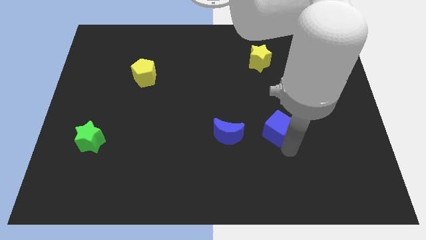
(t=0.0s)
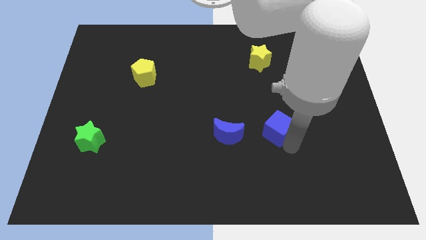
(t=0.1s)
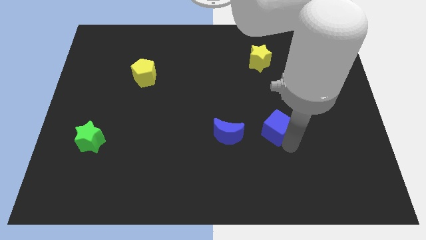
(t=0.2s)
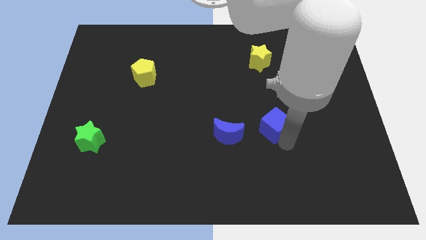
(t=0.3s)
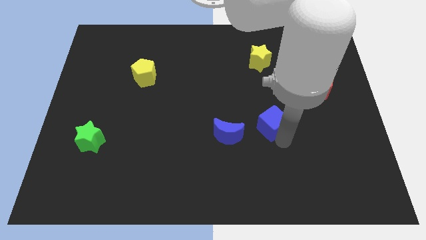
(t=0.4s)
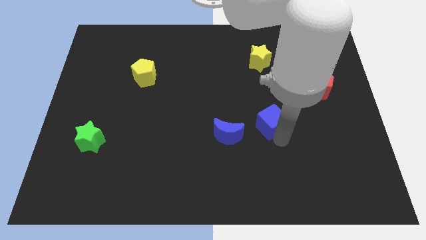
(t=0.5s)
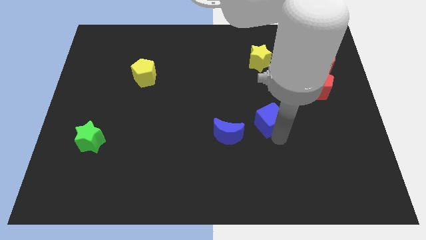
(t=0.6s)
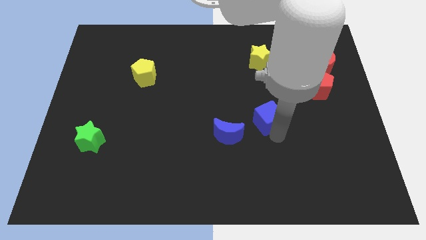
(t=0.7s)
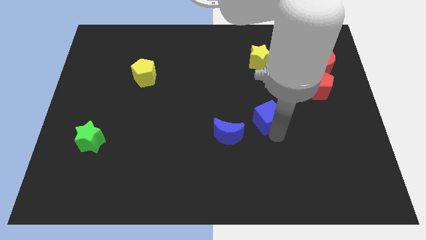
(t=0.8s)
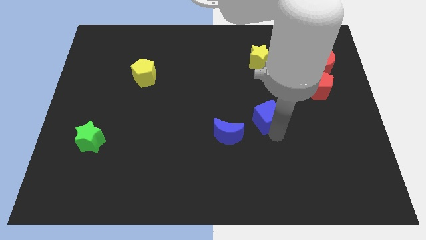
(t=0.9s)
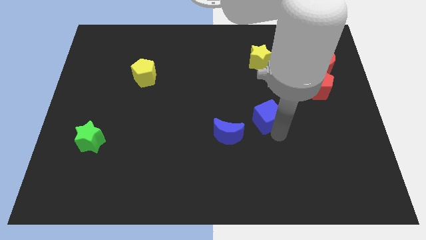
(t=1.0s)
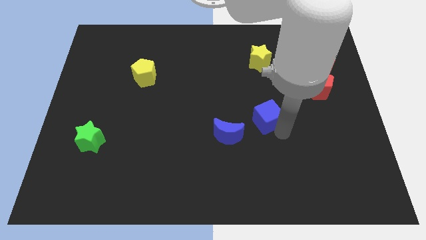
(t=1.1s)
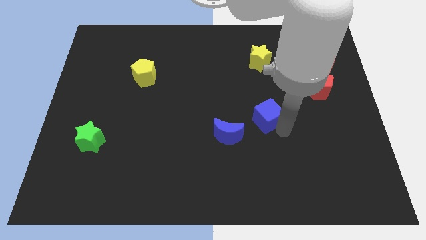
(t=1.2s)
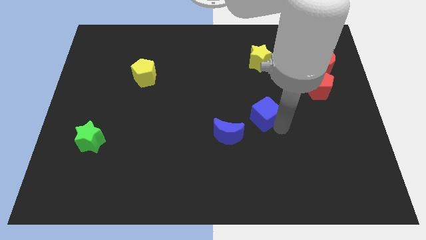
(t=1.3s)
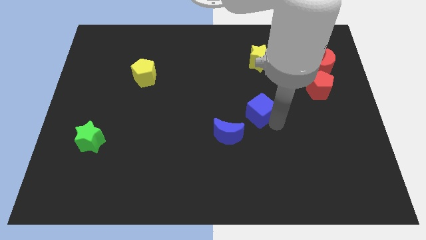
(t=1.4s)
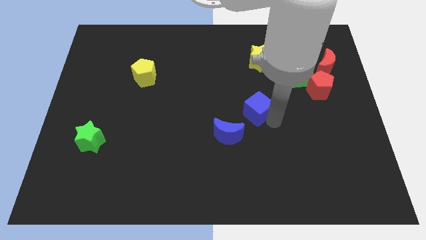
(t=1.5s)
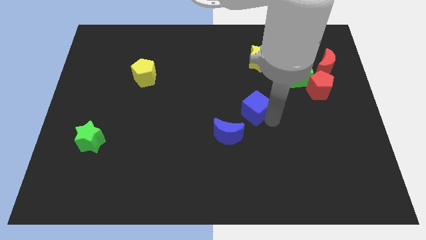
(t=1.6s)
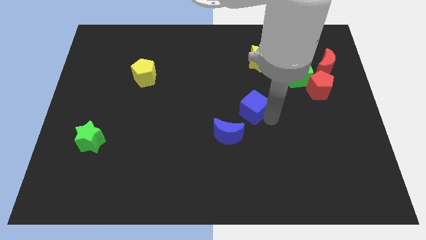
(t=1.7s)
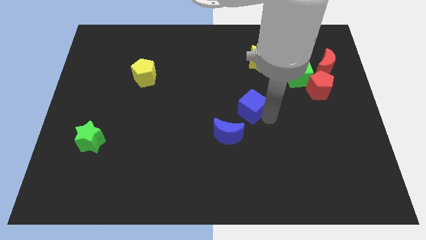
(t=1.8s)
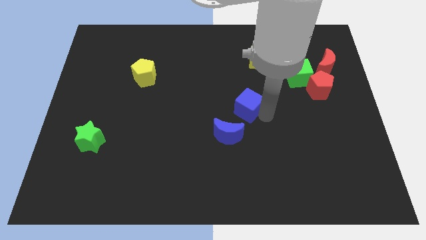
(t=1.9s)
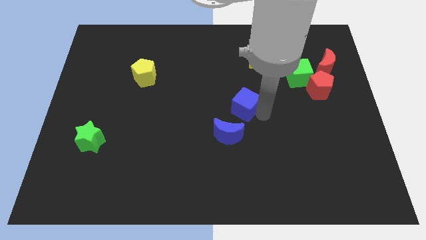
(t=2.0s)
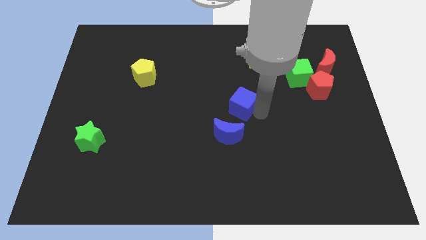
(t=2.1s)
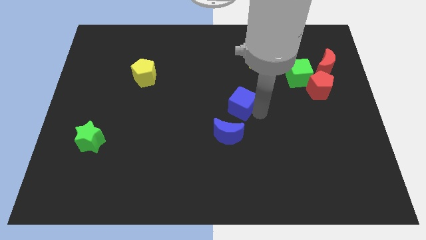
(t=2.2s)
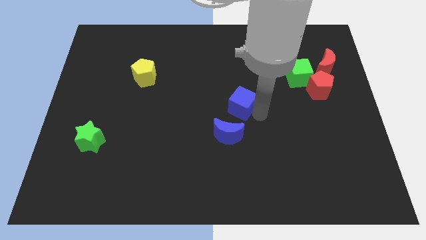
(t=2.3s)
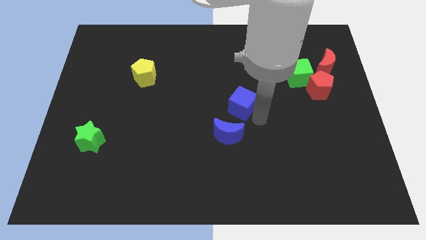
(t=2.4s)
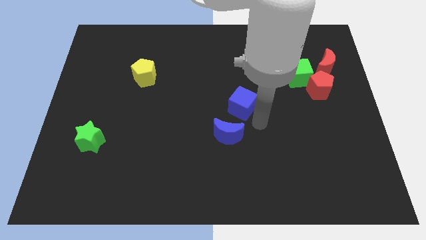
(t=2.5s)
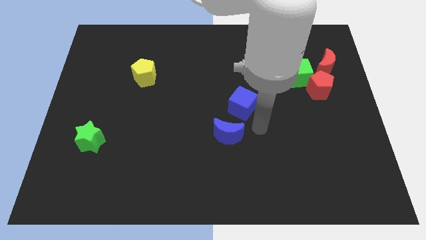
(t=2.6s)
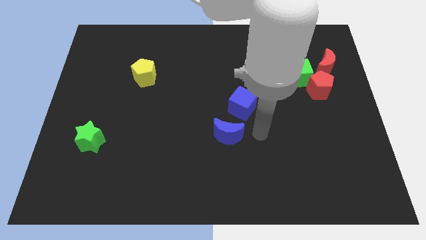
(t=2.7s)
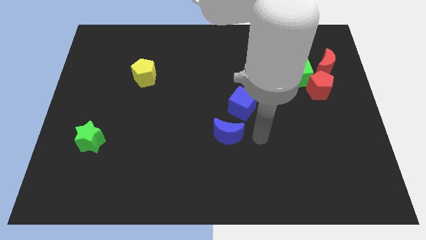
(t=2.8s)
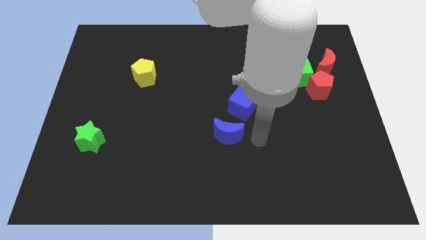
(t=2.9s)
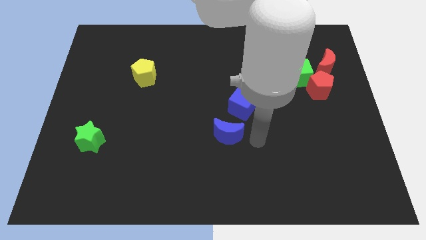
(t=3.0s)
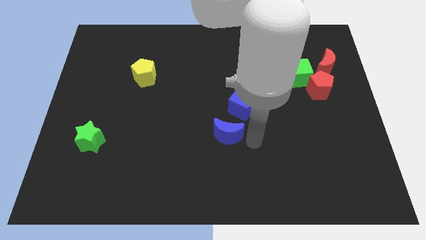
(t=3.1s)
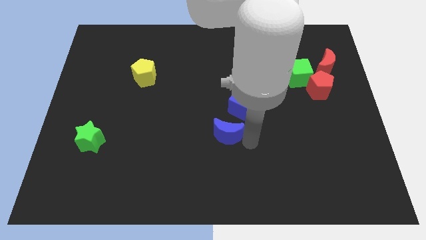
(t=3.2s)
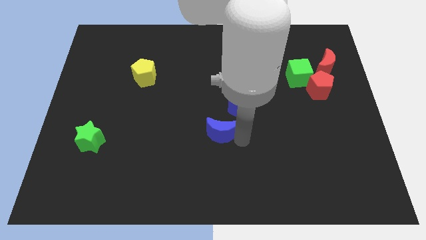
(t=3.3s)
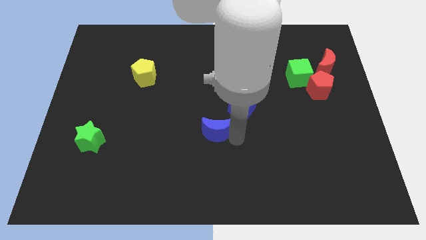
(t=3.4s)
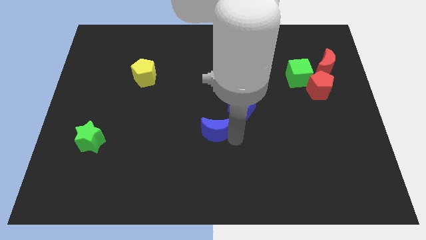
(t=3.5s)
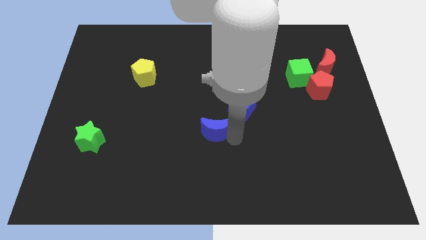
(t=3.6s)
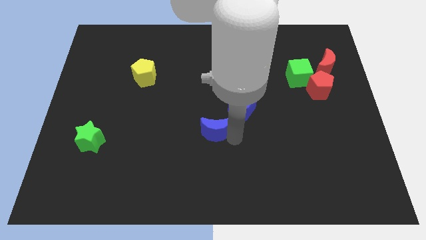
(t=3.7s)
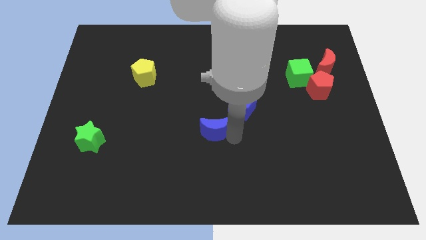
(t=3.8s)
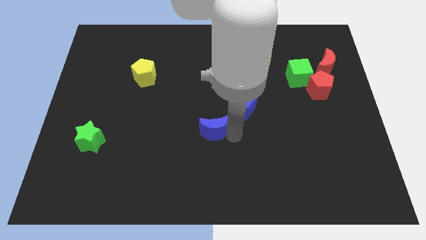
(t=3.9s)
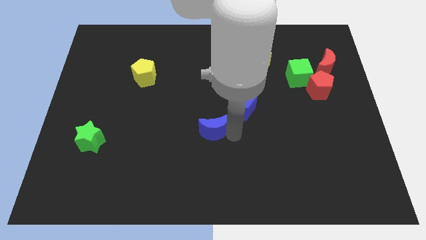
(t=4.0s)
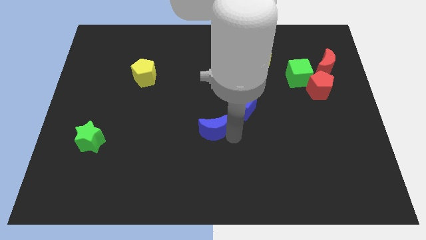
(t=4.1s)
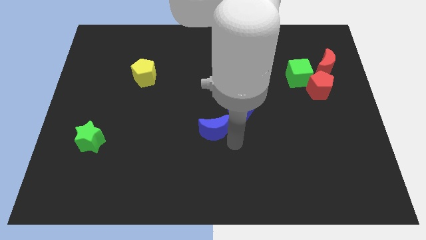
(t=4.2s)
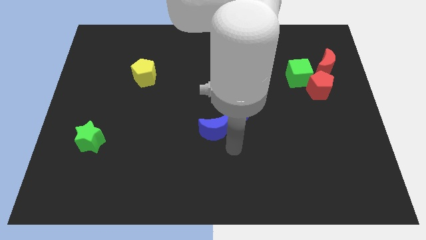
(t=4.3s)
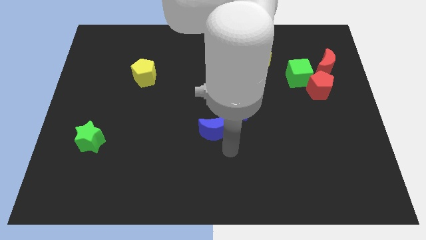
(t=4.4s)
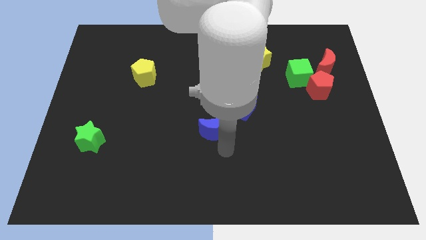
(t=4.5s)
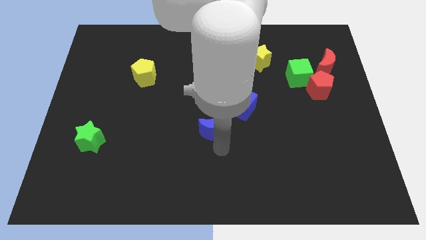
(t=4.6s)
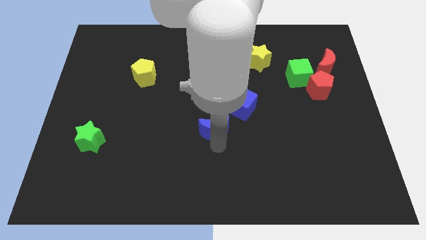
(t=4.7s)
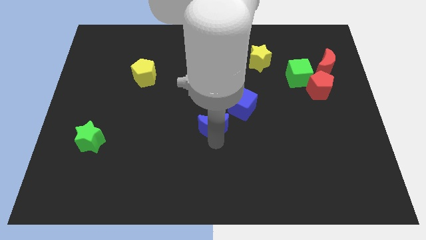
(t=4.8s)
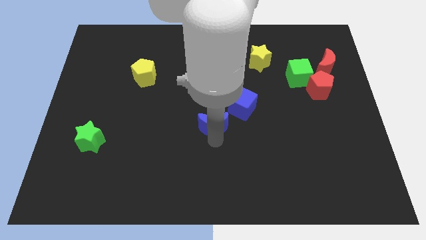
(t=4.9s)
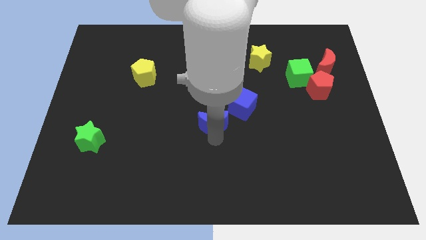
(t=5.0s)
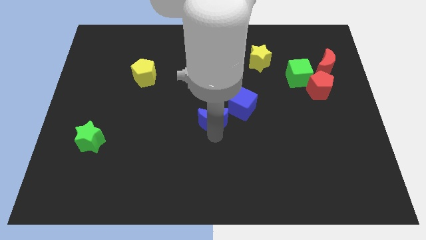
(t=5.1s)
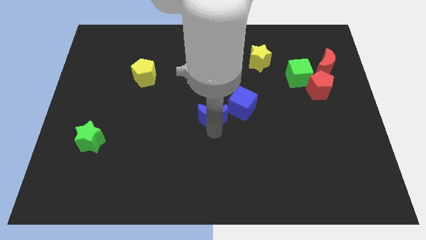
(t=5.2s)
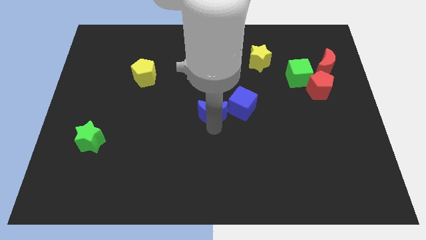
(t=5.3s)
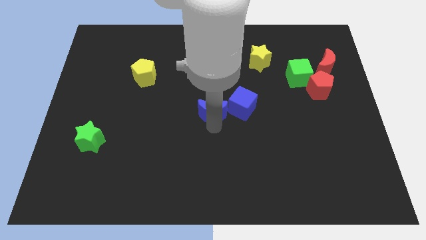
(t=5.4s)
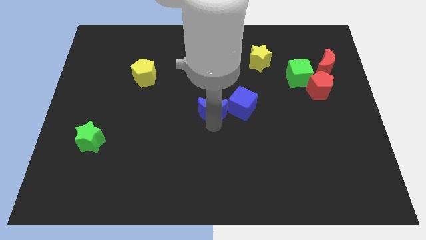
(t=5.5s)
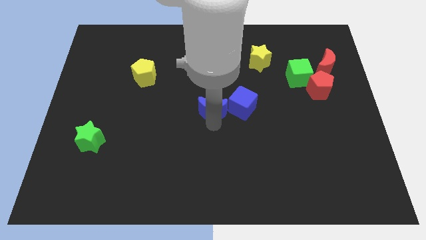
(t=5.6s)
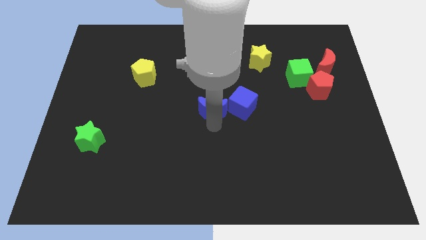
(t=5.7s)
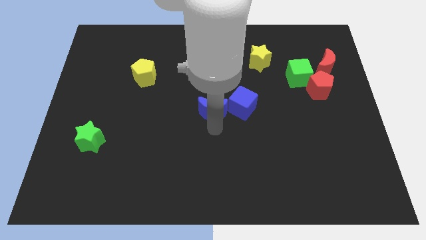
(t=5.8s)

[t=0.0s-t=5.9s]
move the blue moonblue cube to the center of the board

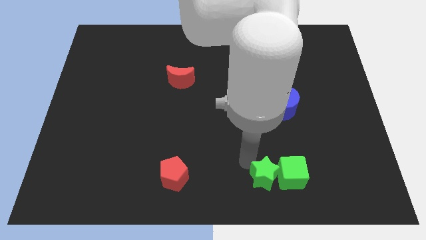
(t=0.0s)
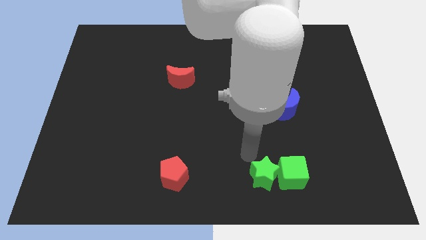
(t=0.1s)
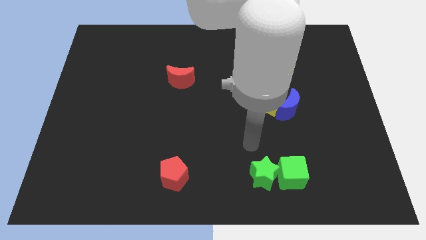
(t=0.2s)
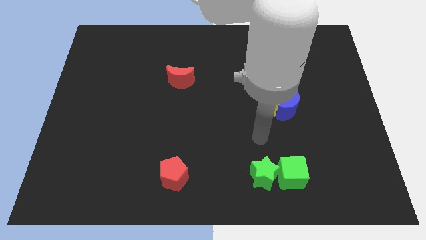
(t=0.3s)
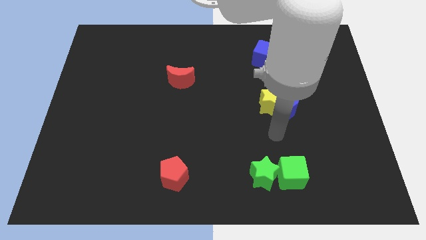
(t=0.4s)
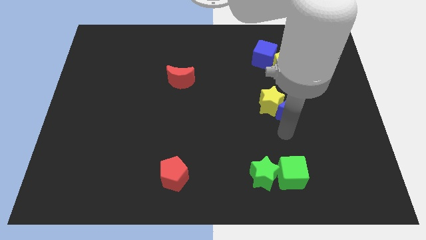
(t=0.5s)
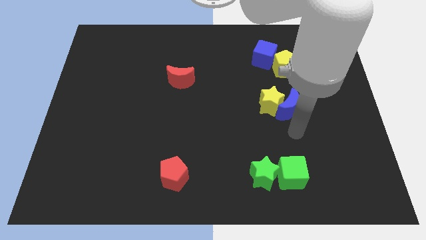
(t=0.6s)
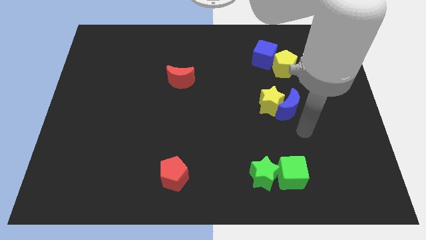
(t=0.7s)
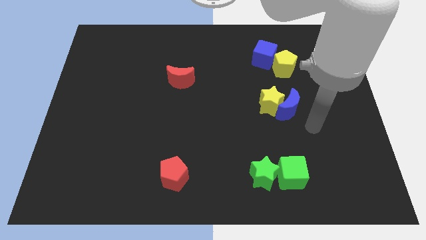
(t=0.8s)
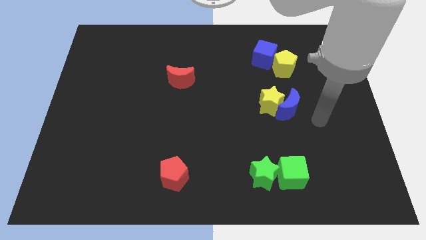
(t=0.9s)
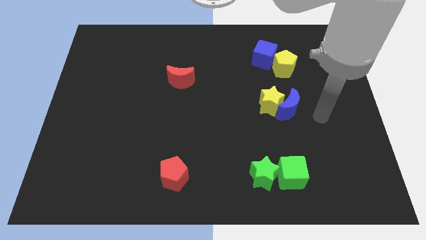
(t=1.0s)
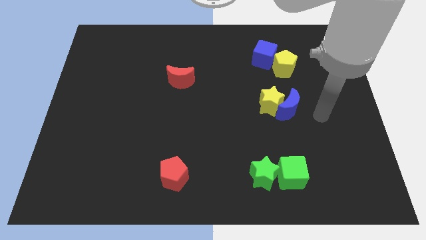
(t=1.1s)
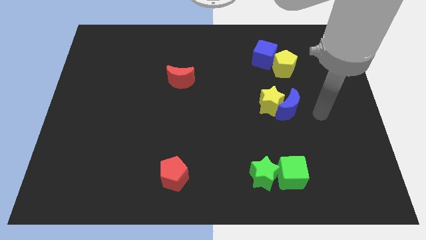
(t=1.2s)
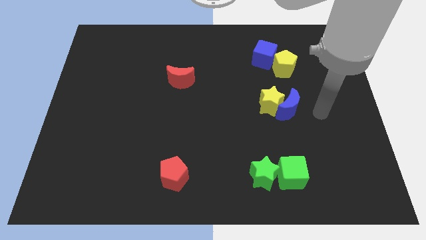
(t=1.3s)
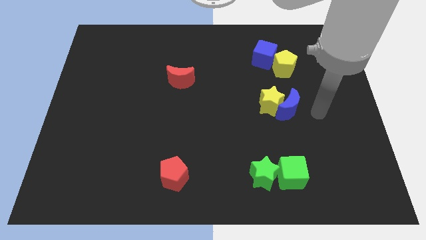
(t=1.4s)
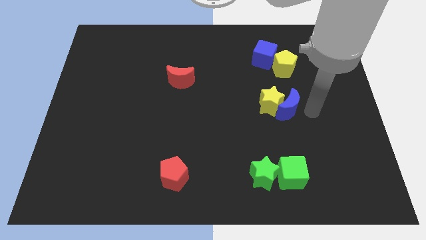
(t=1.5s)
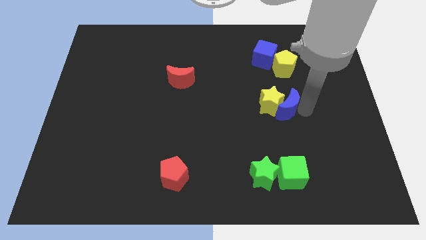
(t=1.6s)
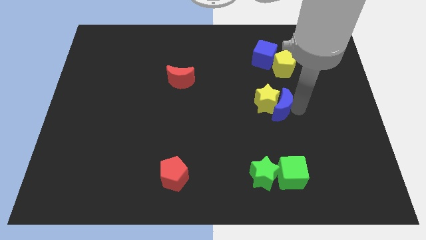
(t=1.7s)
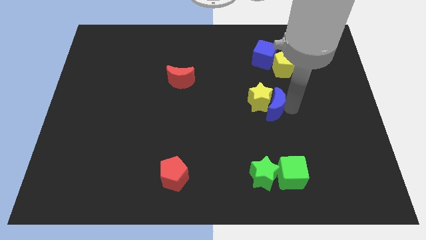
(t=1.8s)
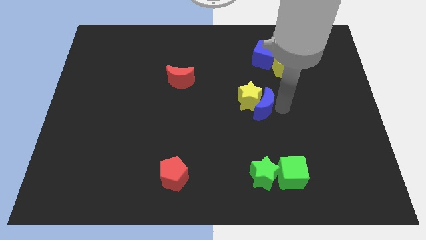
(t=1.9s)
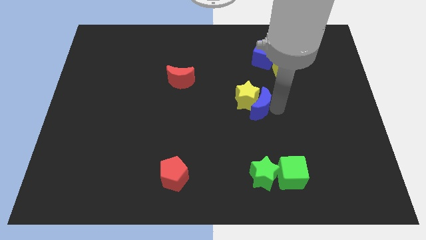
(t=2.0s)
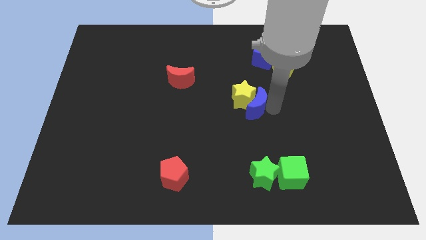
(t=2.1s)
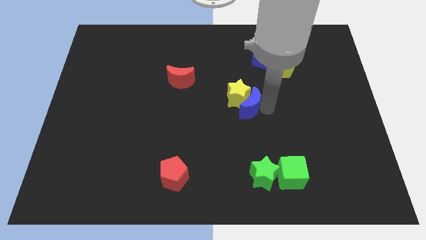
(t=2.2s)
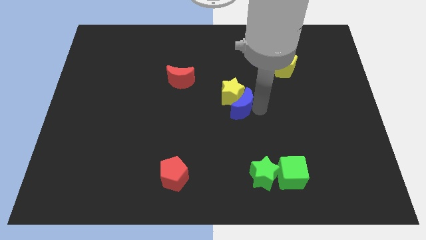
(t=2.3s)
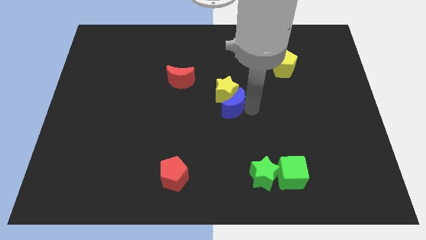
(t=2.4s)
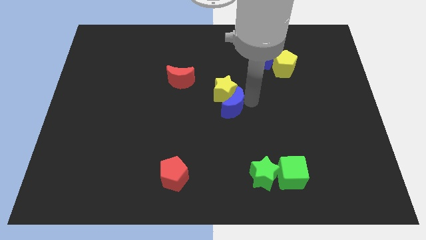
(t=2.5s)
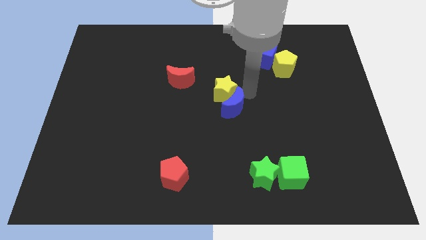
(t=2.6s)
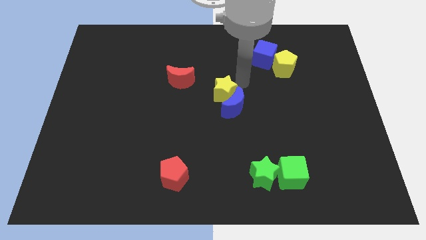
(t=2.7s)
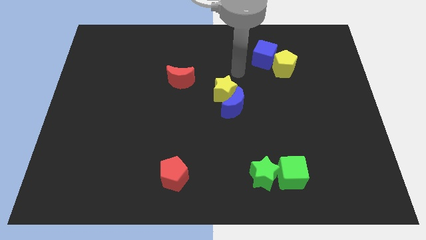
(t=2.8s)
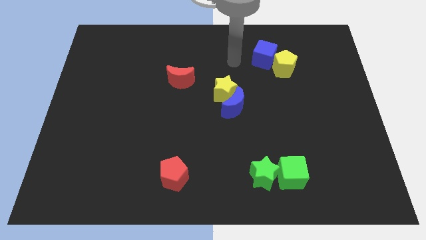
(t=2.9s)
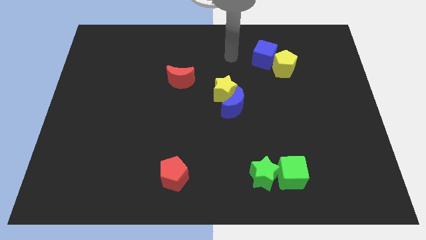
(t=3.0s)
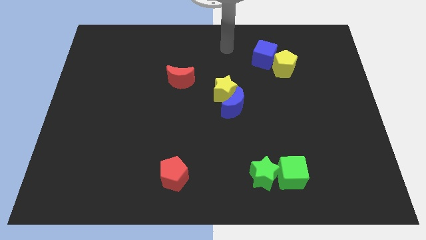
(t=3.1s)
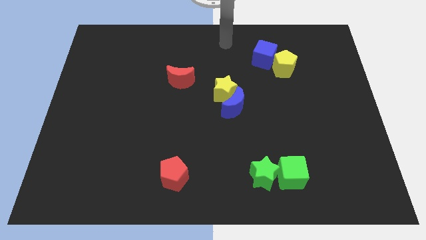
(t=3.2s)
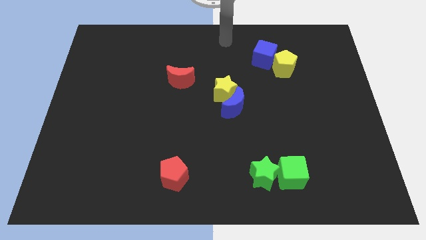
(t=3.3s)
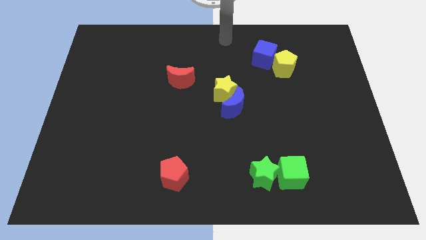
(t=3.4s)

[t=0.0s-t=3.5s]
move the blue crescent into the yellow star
